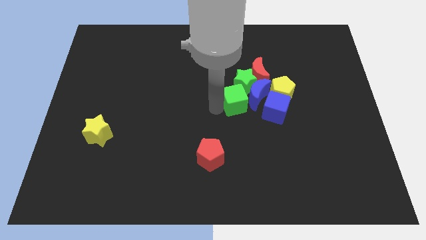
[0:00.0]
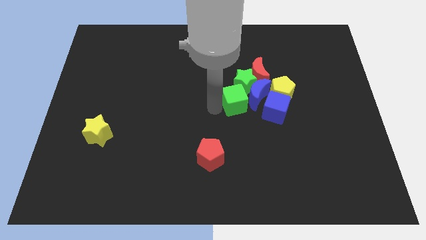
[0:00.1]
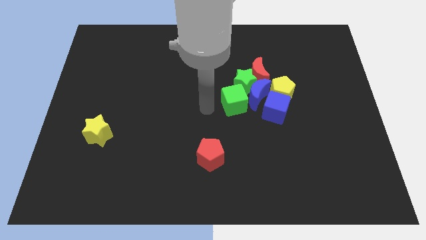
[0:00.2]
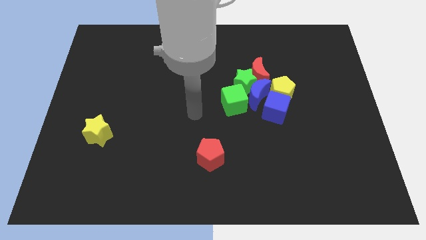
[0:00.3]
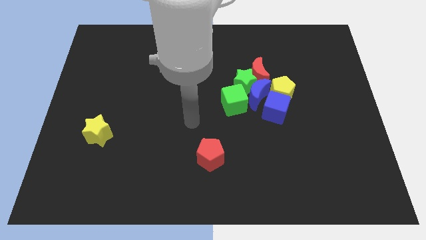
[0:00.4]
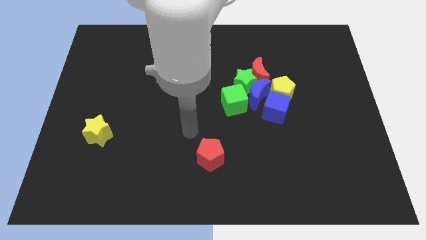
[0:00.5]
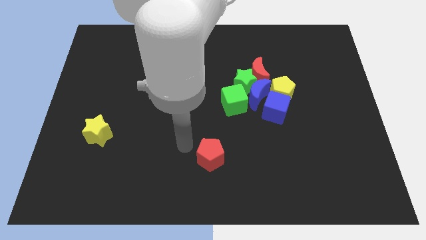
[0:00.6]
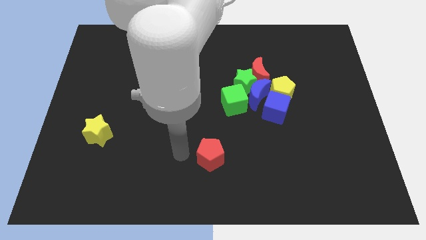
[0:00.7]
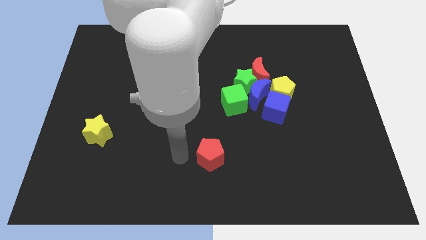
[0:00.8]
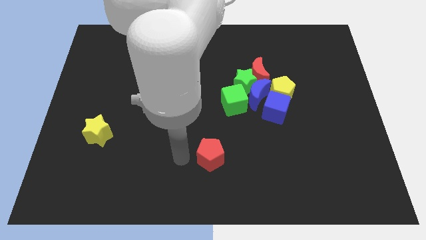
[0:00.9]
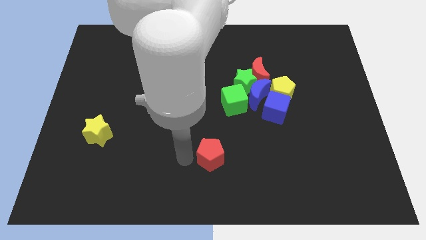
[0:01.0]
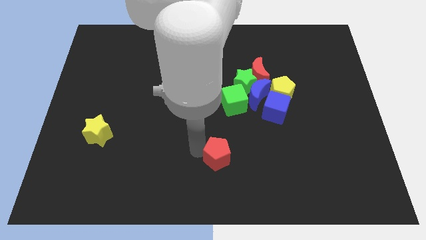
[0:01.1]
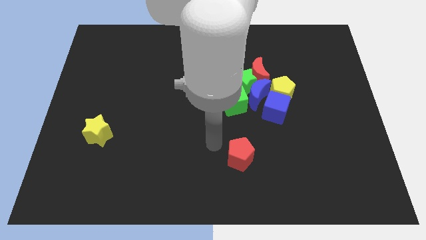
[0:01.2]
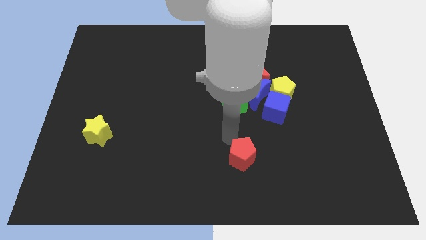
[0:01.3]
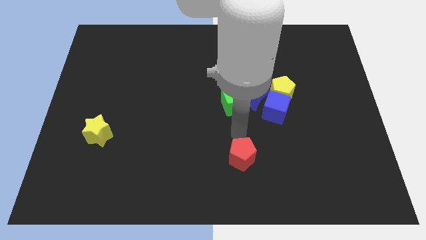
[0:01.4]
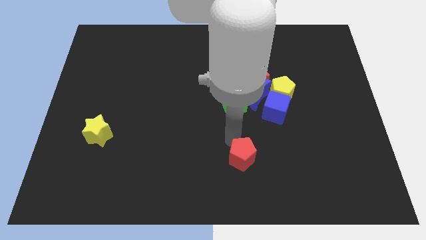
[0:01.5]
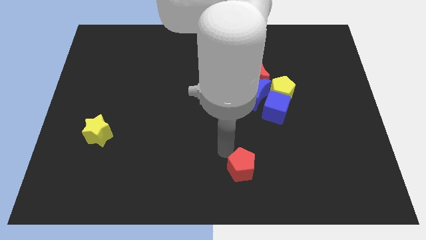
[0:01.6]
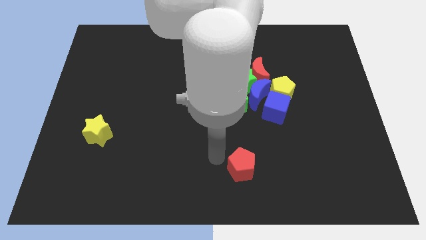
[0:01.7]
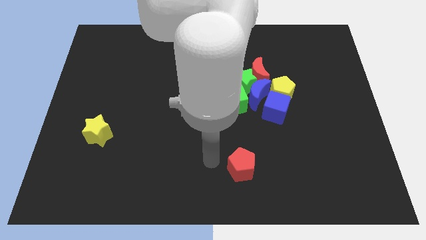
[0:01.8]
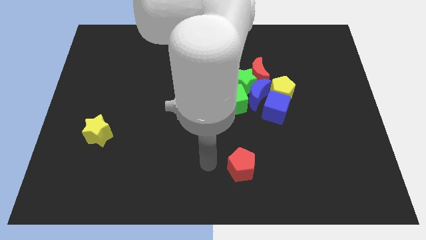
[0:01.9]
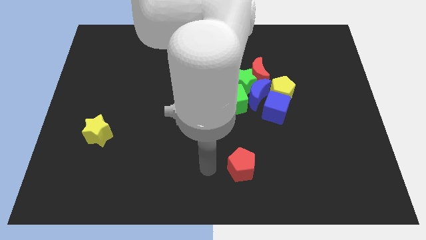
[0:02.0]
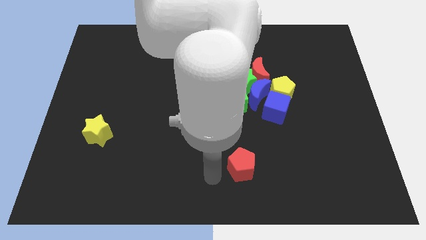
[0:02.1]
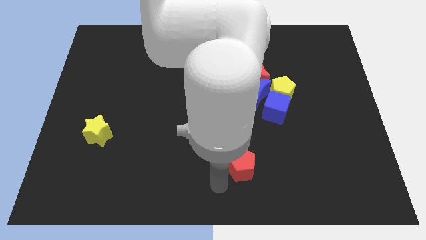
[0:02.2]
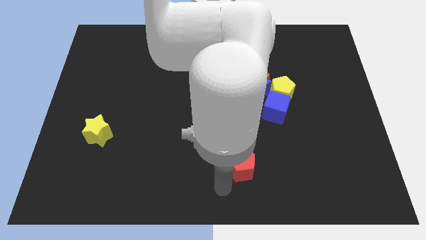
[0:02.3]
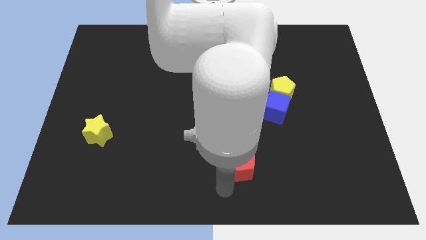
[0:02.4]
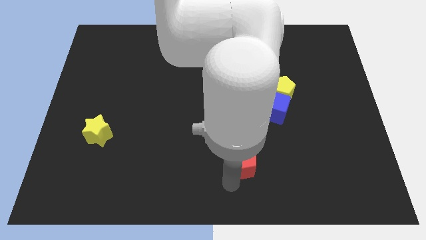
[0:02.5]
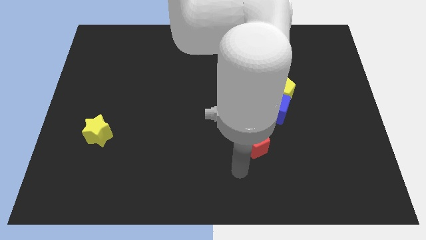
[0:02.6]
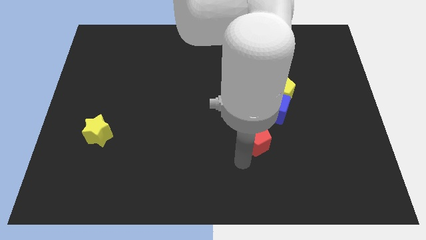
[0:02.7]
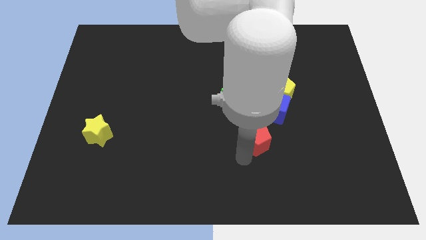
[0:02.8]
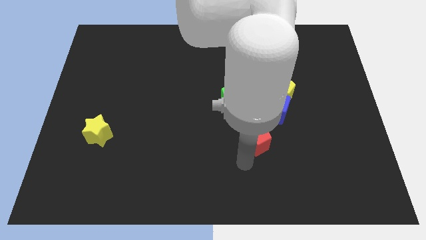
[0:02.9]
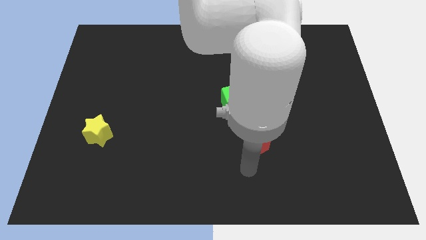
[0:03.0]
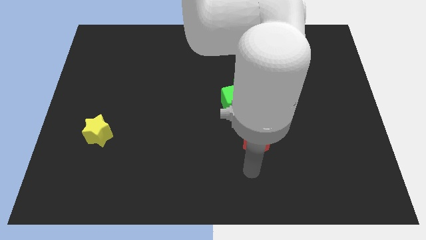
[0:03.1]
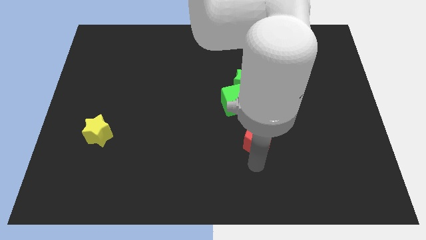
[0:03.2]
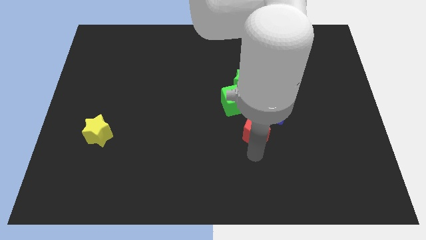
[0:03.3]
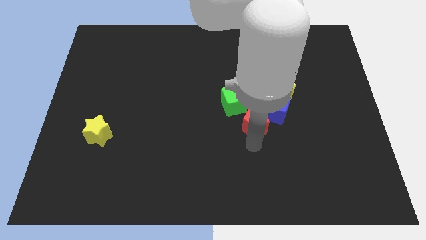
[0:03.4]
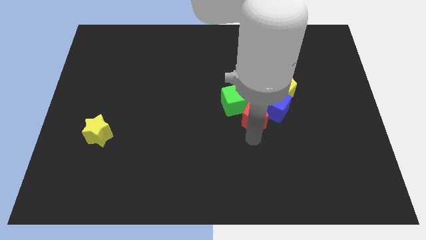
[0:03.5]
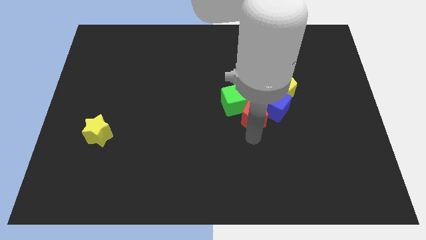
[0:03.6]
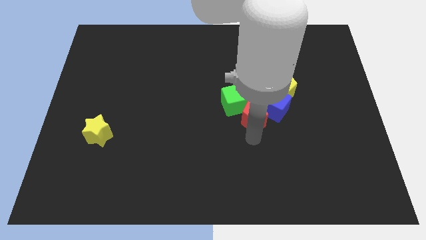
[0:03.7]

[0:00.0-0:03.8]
push the red pentagon into the group of blocks

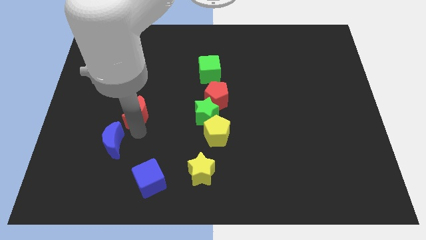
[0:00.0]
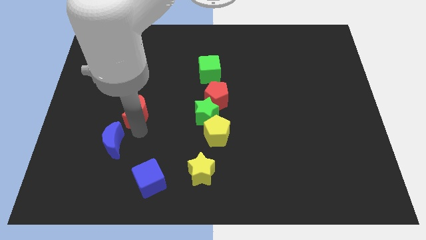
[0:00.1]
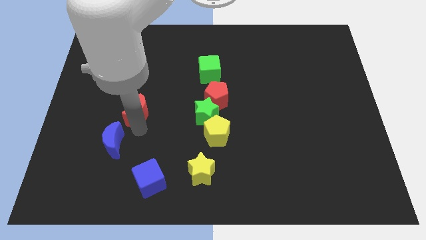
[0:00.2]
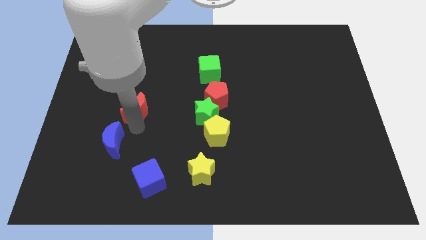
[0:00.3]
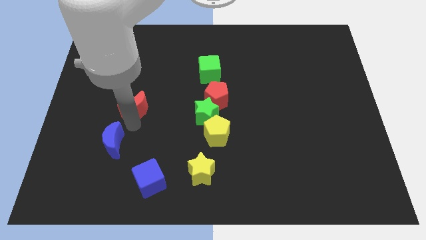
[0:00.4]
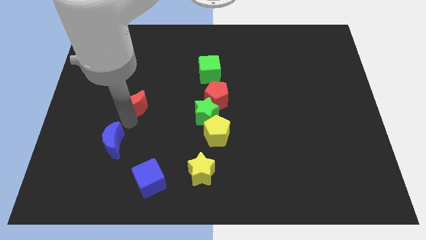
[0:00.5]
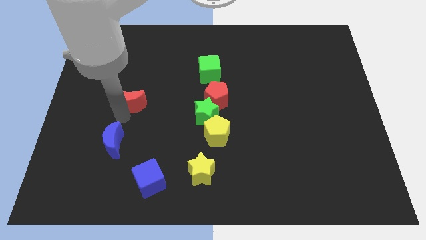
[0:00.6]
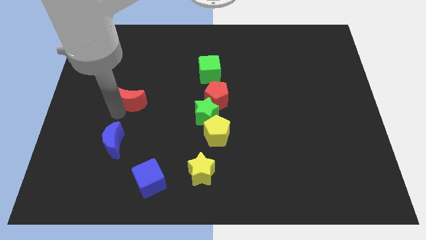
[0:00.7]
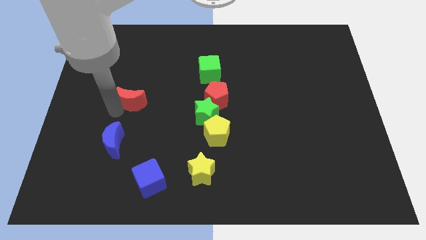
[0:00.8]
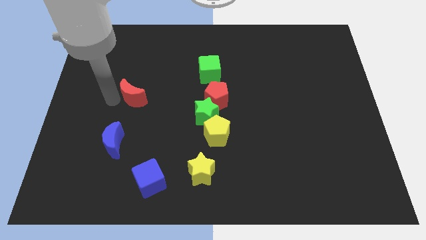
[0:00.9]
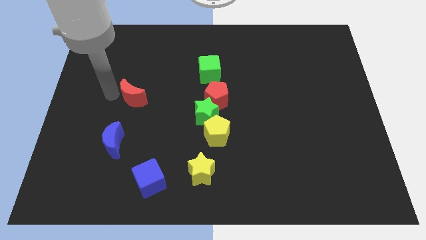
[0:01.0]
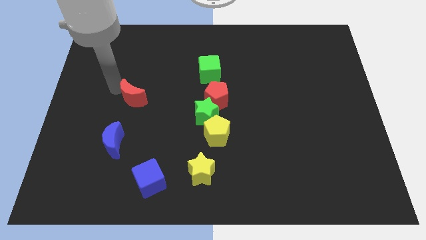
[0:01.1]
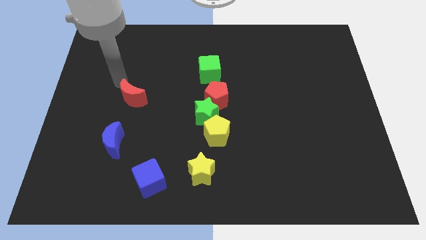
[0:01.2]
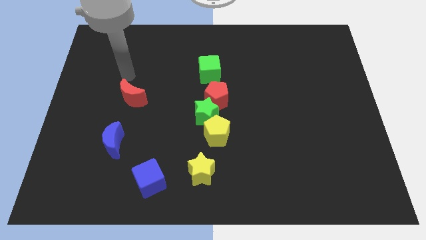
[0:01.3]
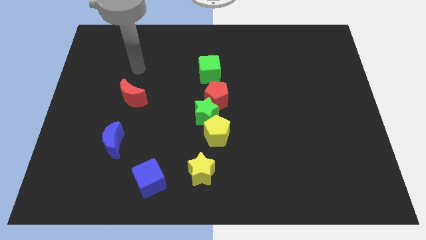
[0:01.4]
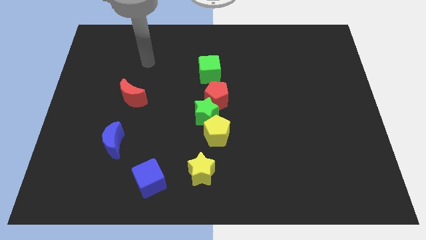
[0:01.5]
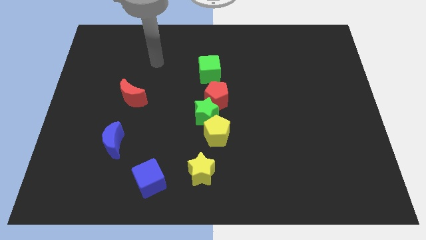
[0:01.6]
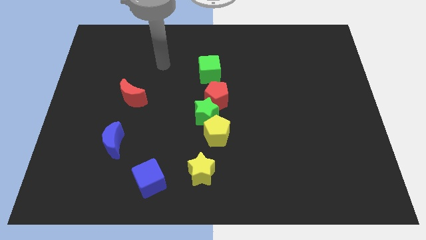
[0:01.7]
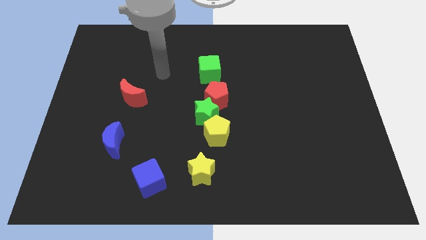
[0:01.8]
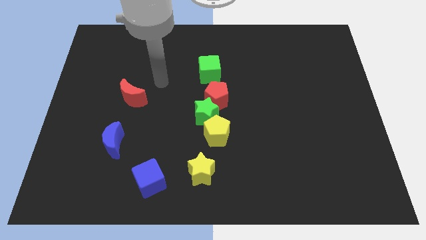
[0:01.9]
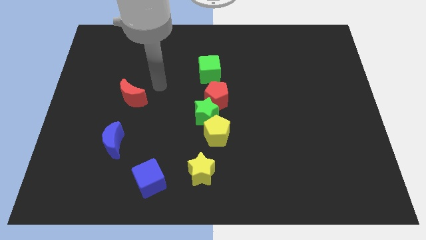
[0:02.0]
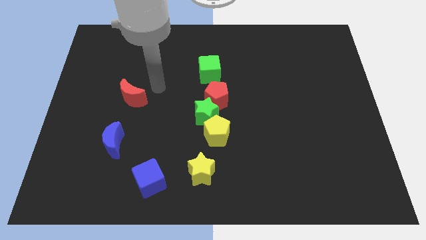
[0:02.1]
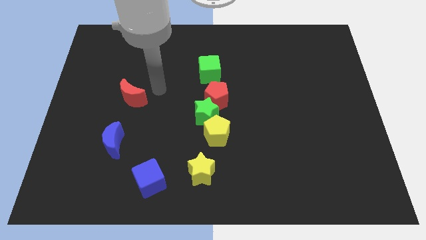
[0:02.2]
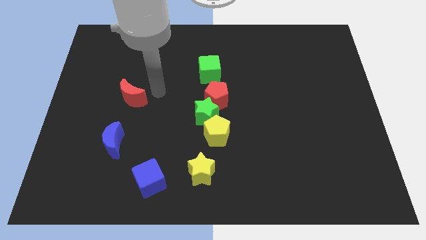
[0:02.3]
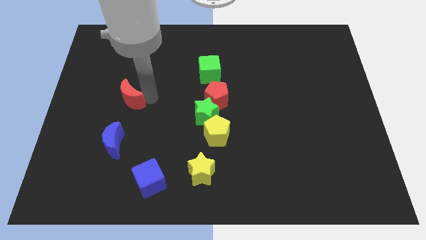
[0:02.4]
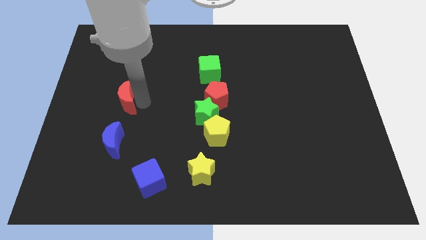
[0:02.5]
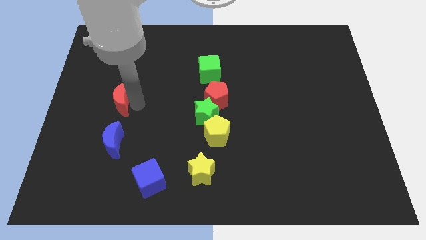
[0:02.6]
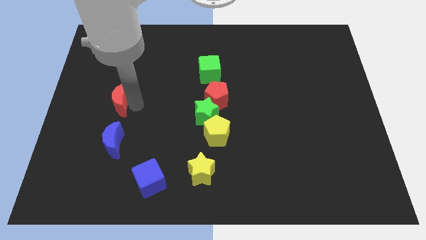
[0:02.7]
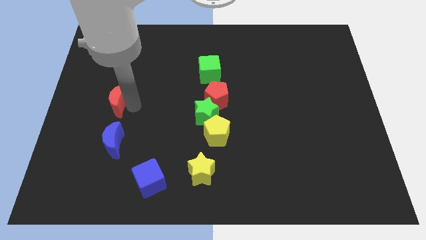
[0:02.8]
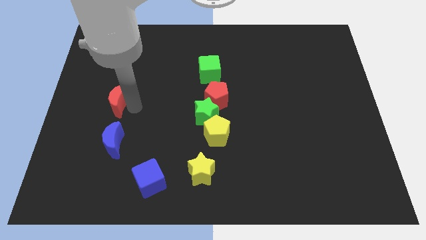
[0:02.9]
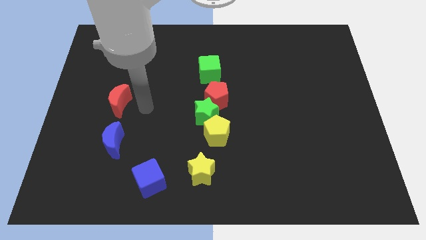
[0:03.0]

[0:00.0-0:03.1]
place red moon above blue moon

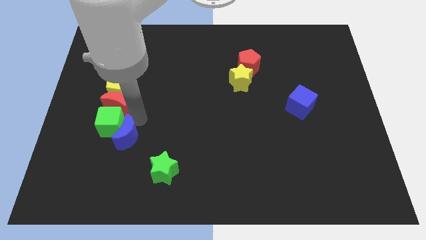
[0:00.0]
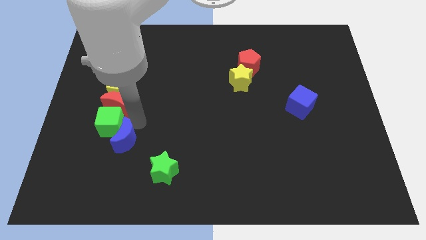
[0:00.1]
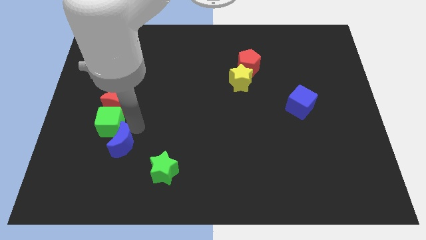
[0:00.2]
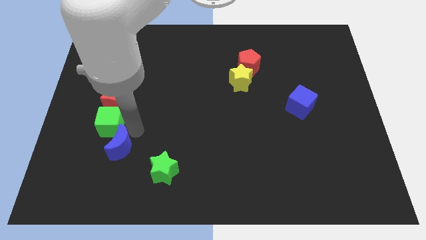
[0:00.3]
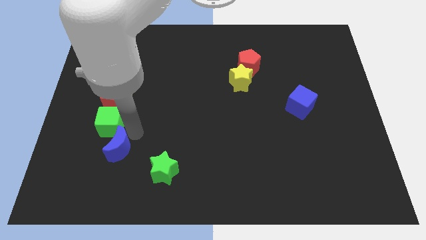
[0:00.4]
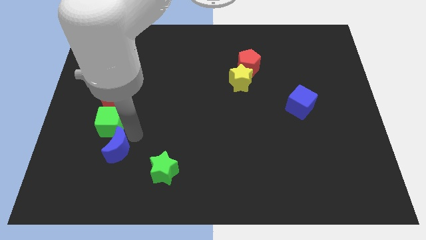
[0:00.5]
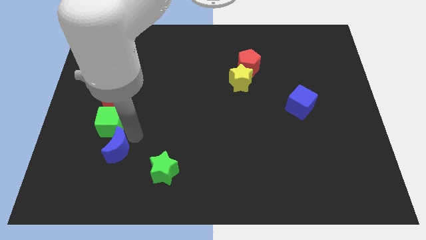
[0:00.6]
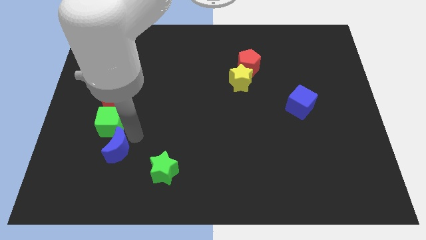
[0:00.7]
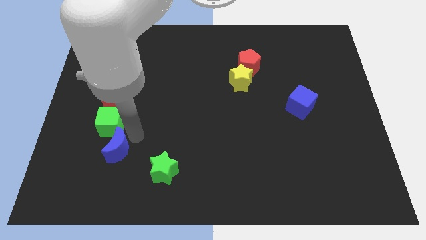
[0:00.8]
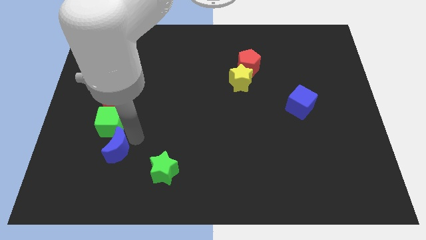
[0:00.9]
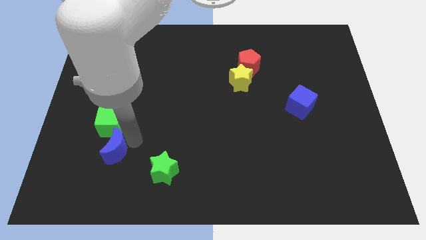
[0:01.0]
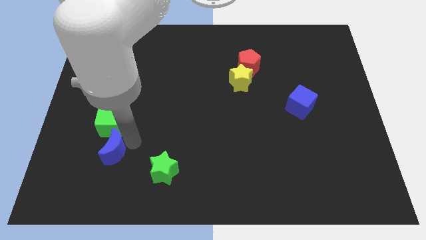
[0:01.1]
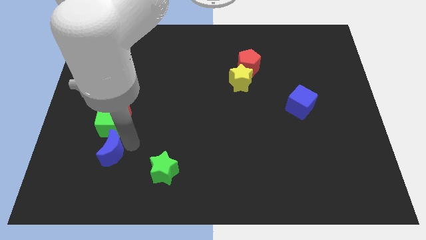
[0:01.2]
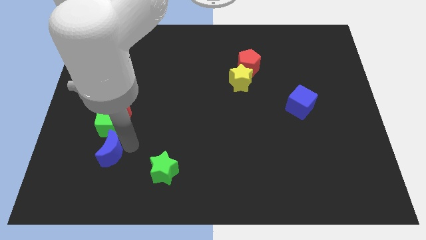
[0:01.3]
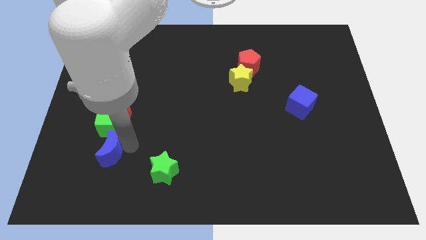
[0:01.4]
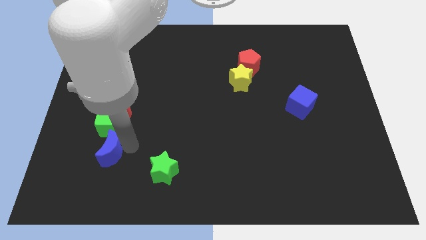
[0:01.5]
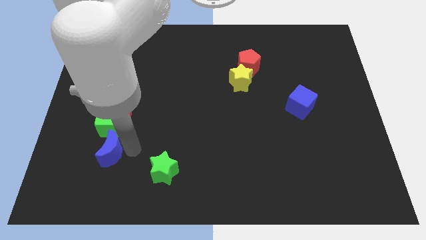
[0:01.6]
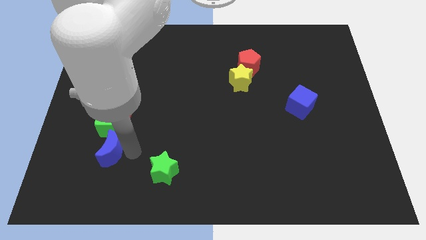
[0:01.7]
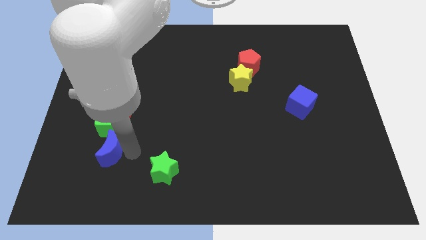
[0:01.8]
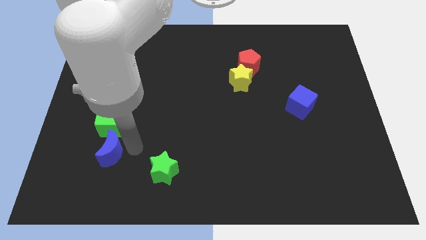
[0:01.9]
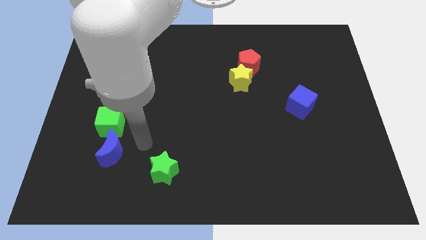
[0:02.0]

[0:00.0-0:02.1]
move the blue crescent towards down to the green cube

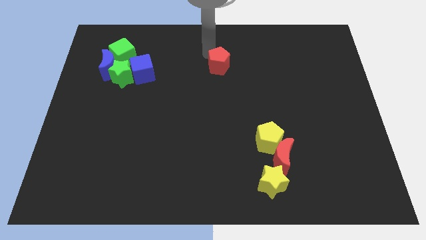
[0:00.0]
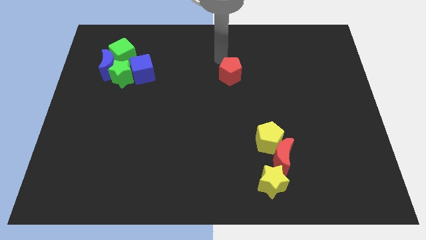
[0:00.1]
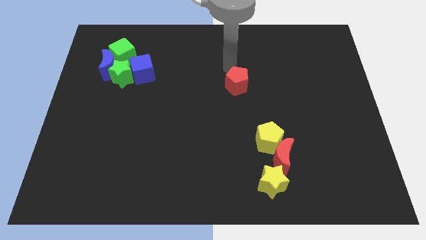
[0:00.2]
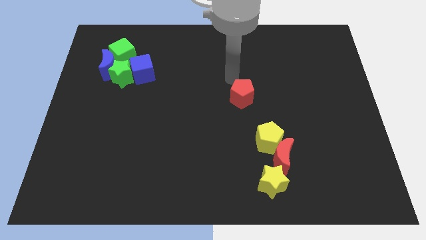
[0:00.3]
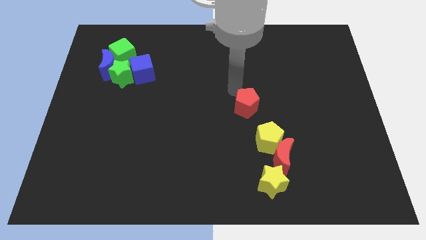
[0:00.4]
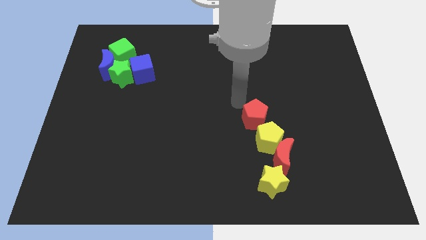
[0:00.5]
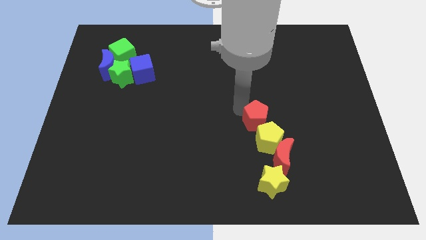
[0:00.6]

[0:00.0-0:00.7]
place red pentagon above yellow pentagon
